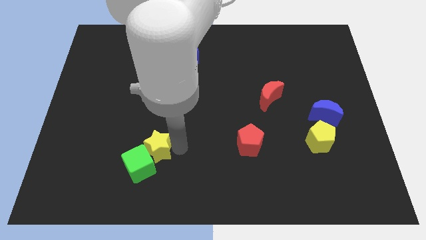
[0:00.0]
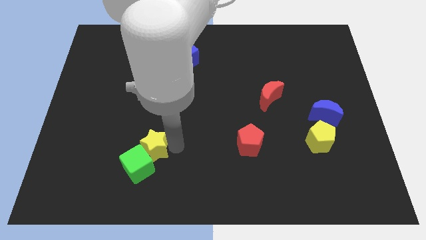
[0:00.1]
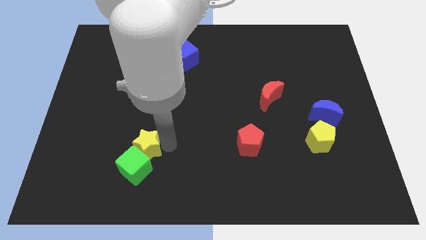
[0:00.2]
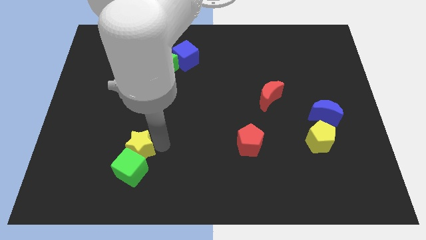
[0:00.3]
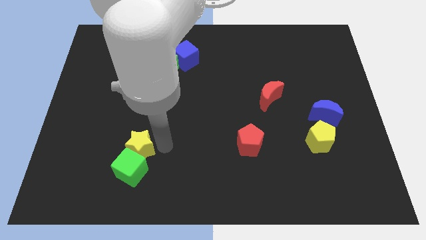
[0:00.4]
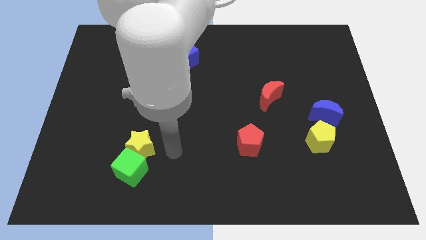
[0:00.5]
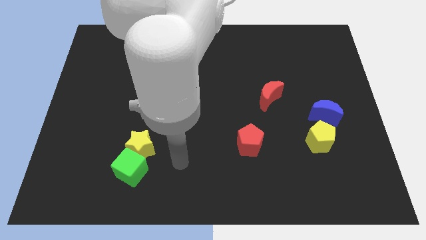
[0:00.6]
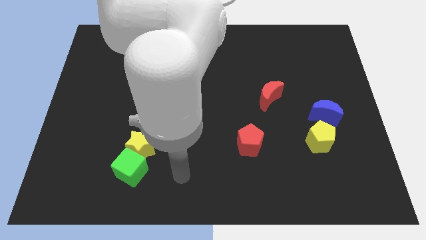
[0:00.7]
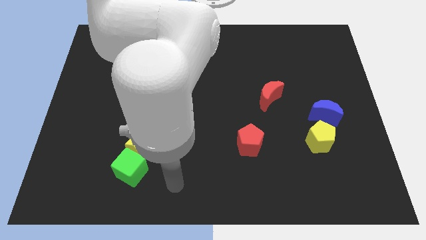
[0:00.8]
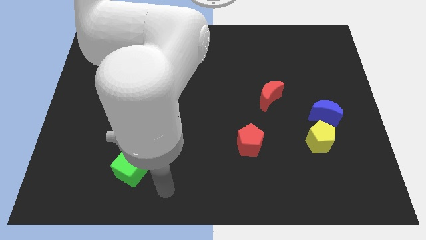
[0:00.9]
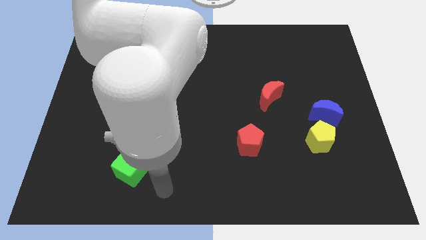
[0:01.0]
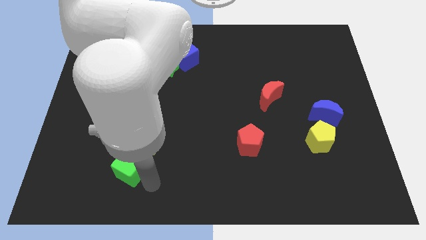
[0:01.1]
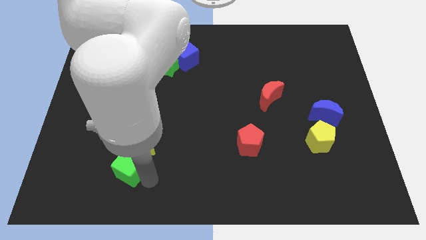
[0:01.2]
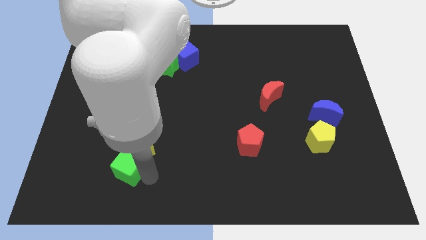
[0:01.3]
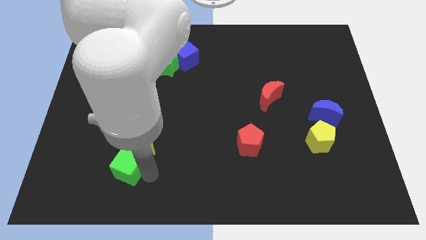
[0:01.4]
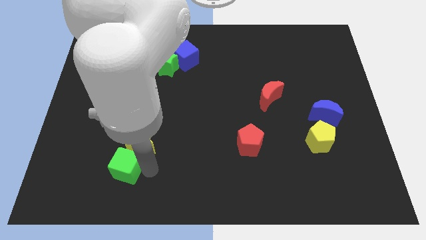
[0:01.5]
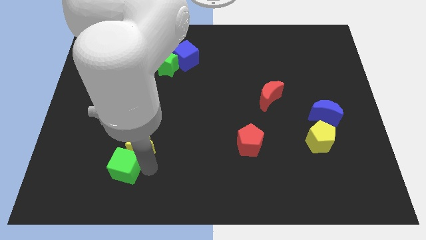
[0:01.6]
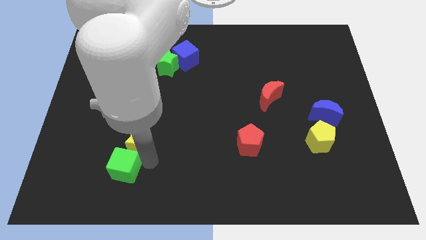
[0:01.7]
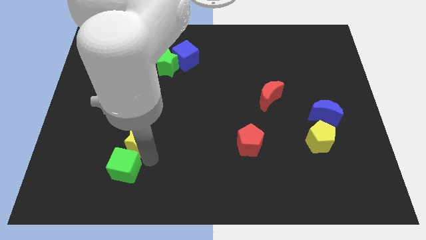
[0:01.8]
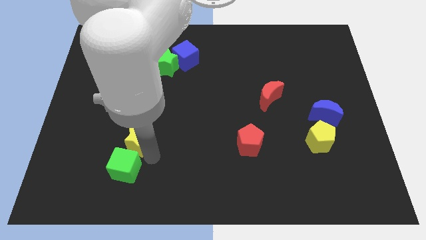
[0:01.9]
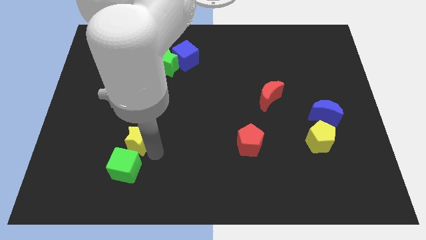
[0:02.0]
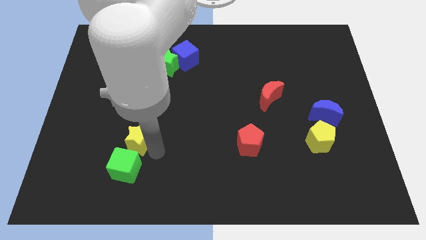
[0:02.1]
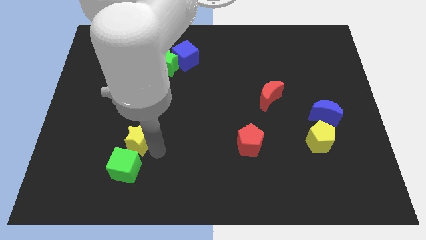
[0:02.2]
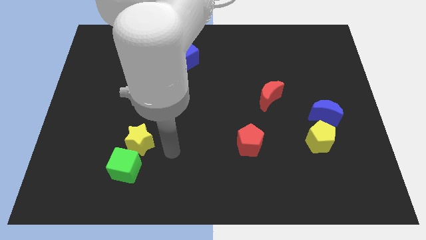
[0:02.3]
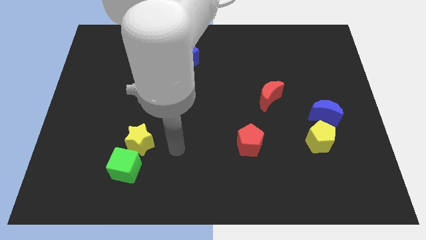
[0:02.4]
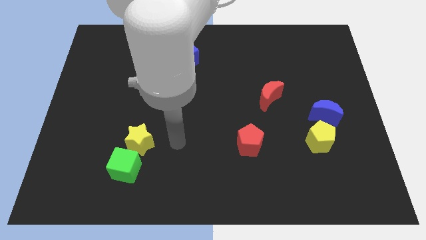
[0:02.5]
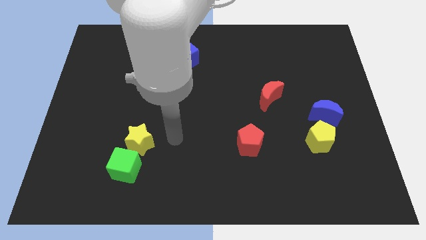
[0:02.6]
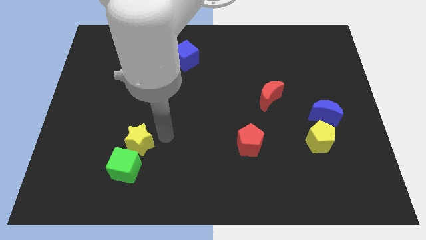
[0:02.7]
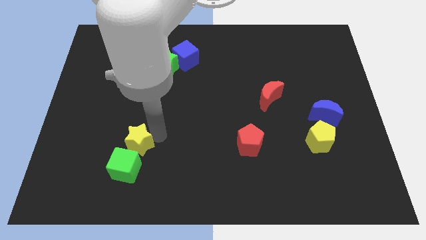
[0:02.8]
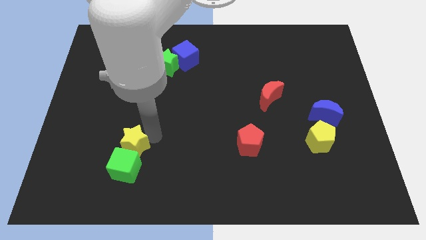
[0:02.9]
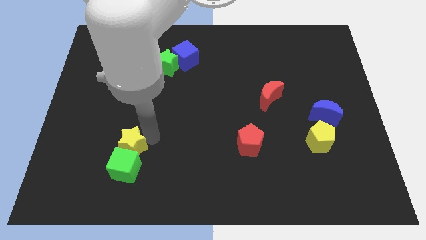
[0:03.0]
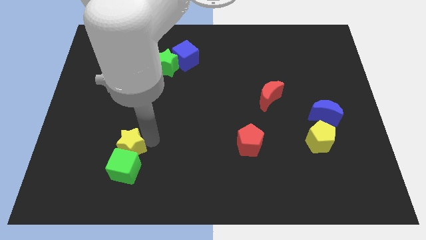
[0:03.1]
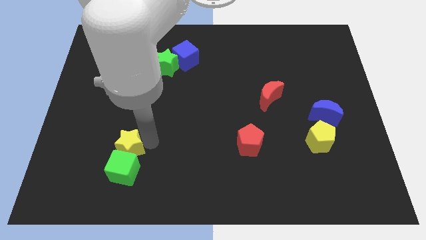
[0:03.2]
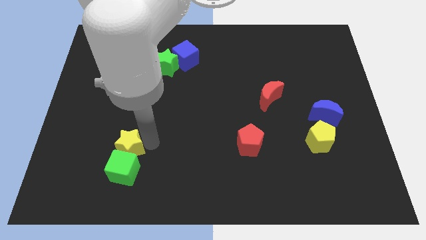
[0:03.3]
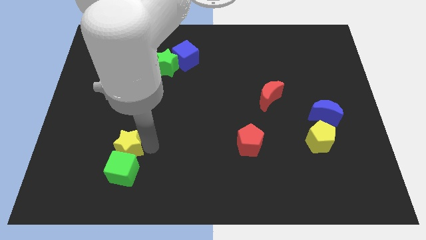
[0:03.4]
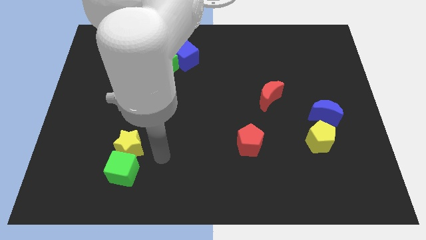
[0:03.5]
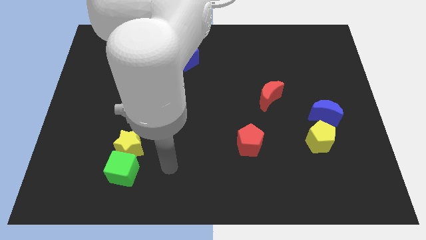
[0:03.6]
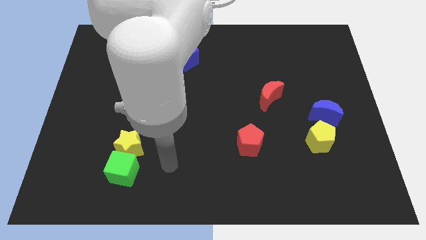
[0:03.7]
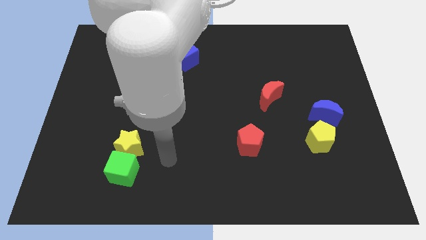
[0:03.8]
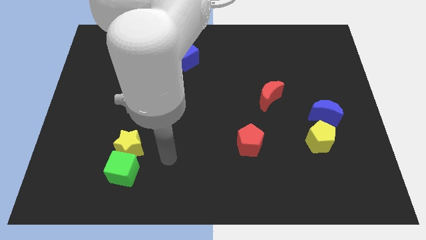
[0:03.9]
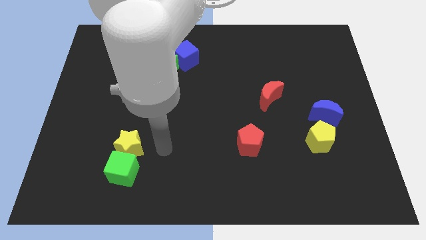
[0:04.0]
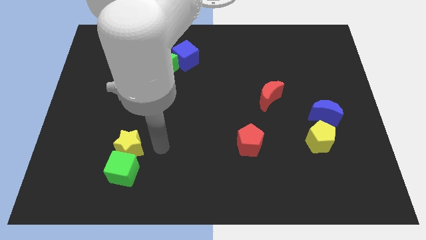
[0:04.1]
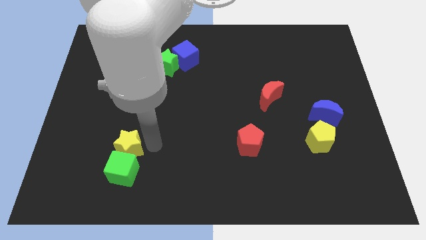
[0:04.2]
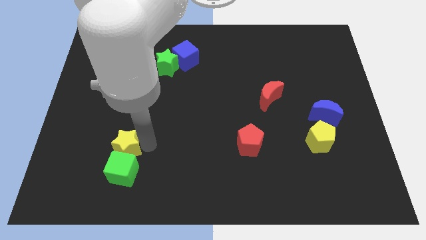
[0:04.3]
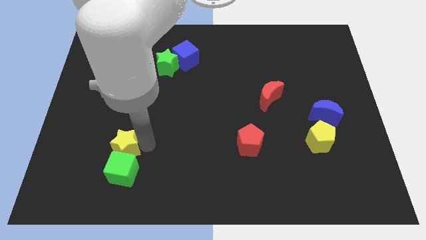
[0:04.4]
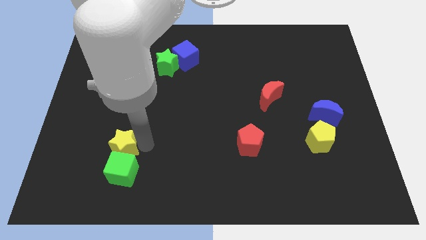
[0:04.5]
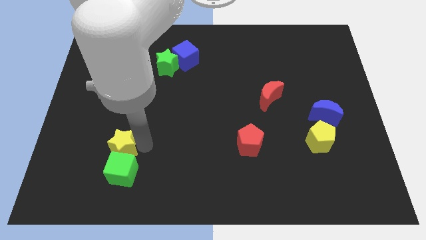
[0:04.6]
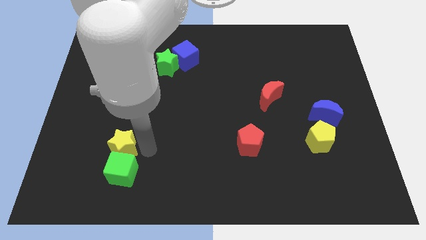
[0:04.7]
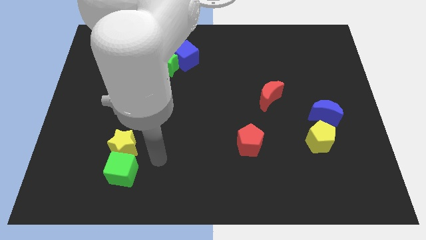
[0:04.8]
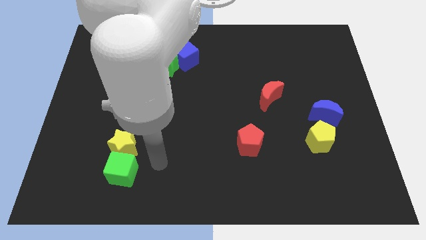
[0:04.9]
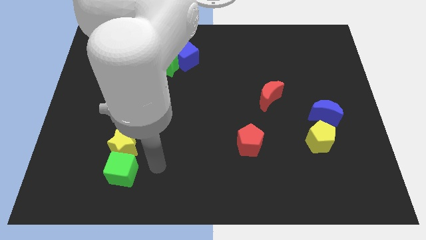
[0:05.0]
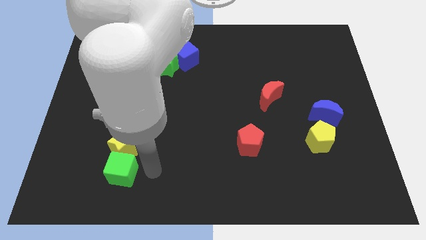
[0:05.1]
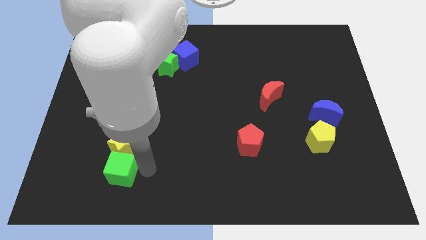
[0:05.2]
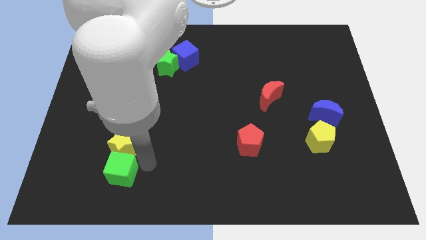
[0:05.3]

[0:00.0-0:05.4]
push the yellow star and green cube to the left side of the board

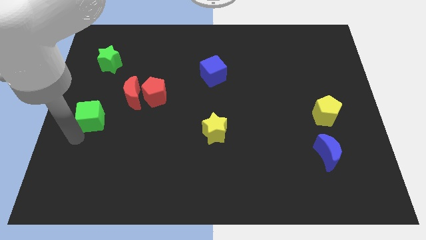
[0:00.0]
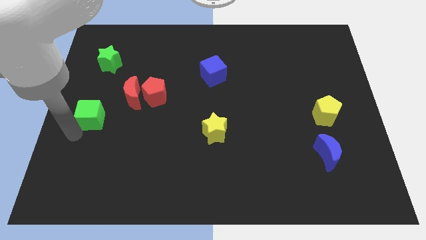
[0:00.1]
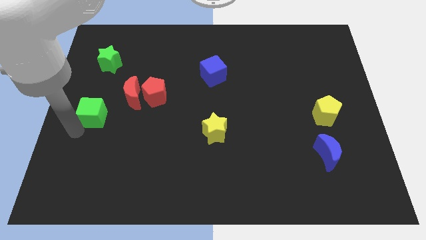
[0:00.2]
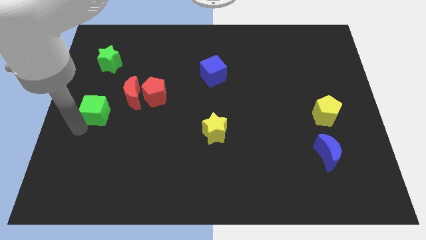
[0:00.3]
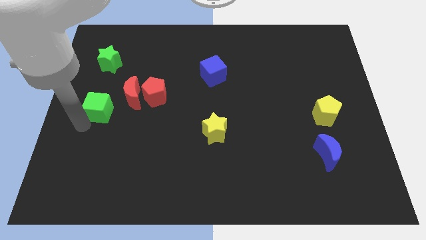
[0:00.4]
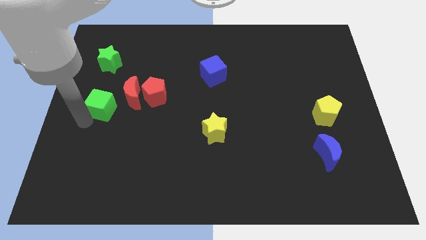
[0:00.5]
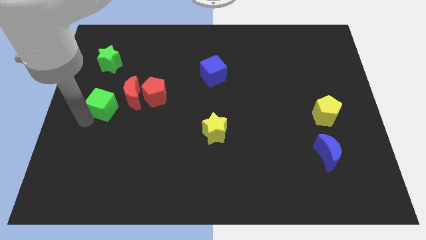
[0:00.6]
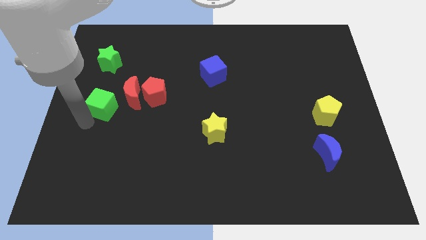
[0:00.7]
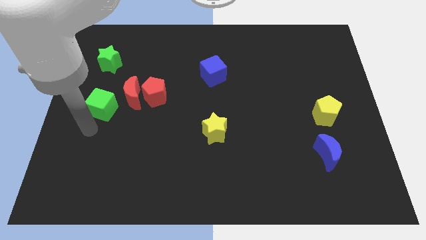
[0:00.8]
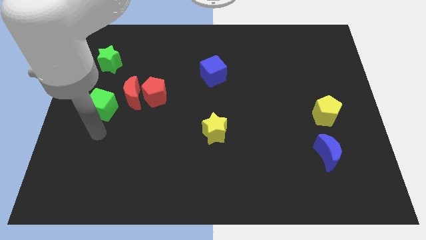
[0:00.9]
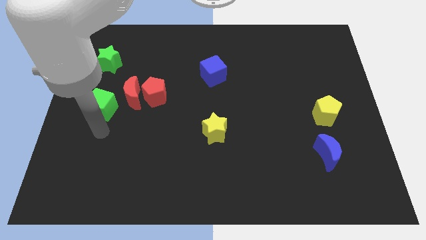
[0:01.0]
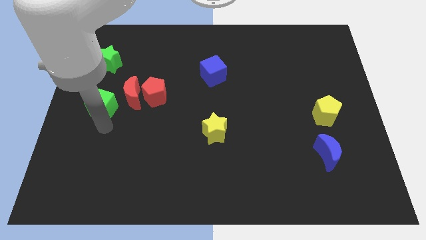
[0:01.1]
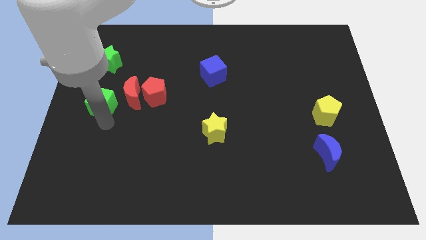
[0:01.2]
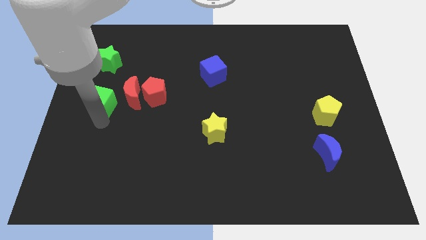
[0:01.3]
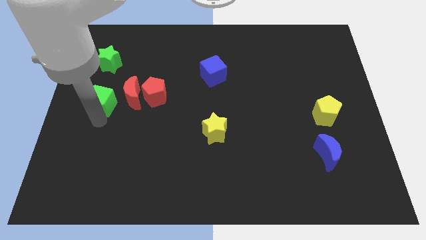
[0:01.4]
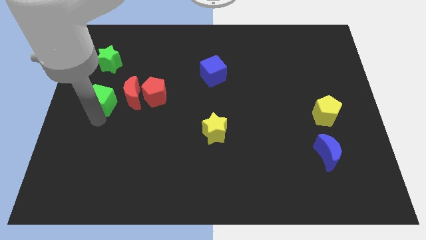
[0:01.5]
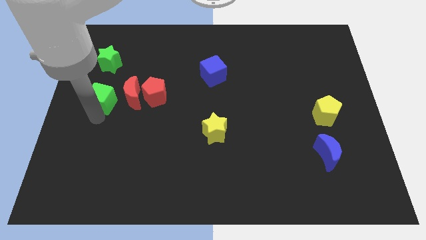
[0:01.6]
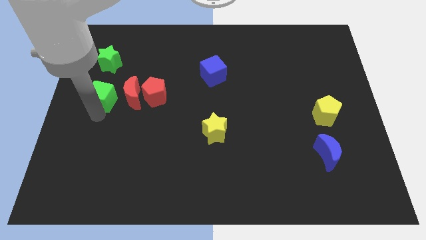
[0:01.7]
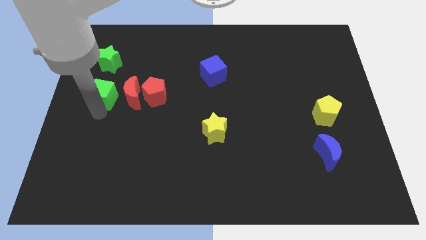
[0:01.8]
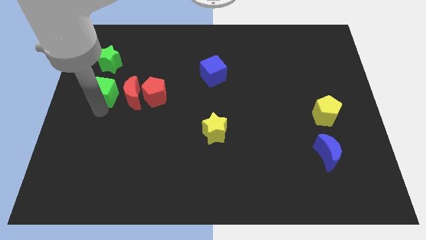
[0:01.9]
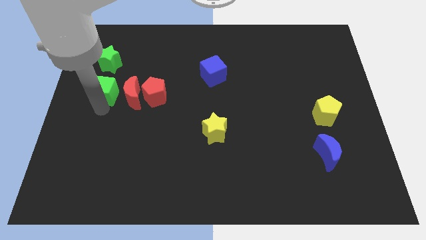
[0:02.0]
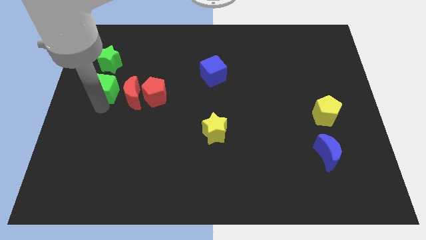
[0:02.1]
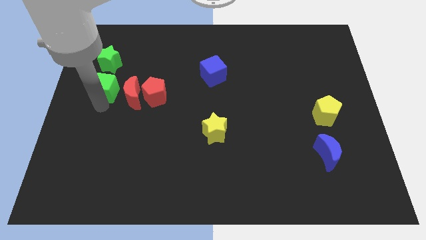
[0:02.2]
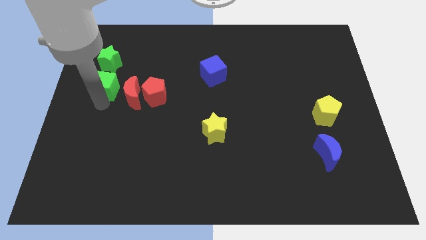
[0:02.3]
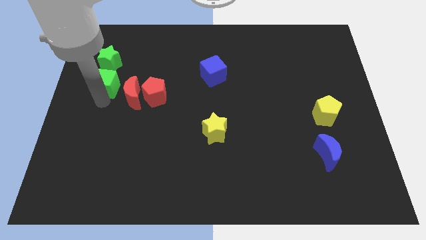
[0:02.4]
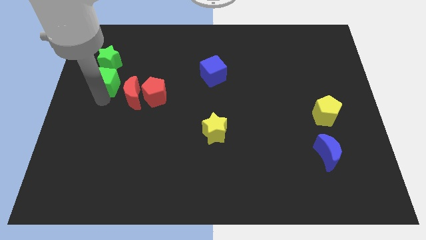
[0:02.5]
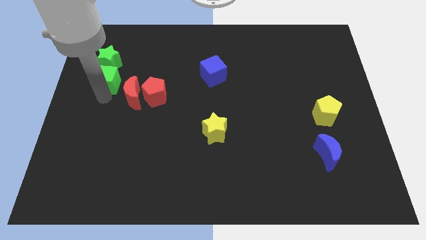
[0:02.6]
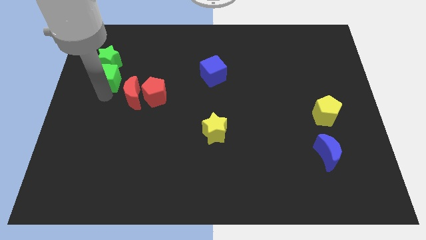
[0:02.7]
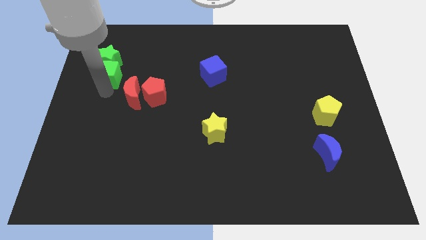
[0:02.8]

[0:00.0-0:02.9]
move the green cube vertically at the bottom of the green star

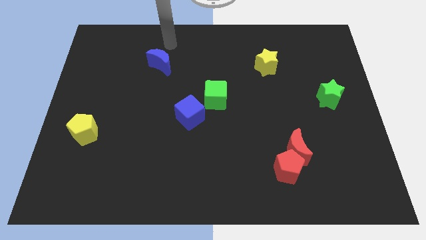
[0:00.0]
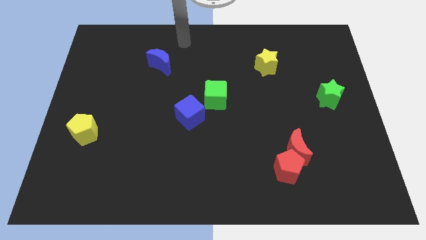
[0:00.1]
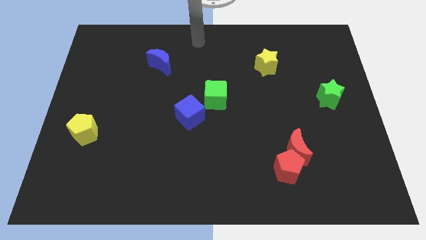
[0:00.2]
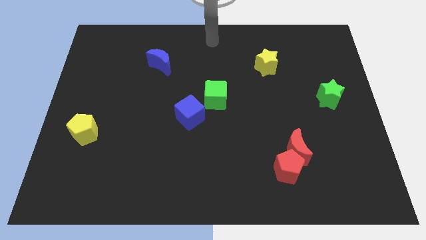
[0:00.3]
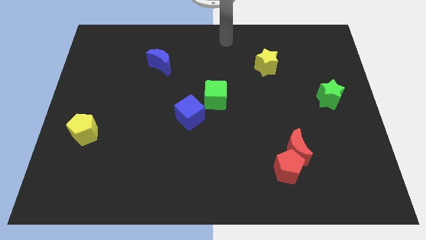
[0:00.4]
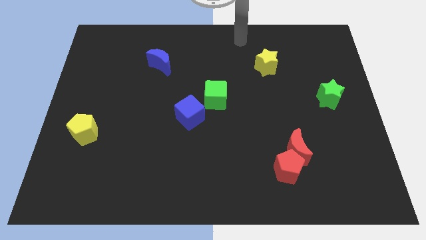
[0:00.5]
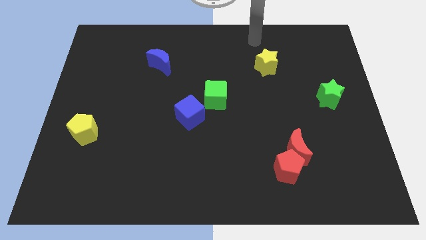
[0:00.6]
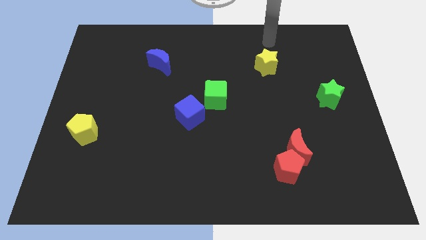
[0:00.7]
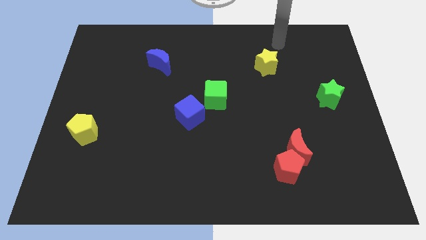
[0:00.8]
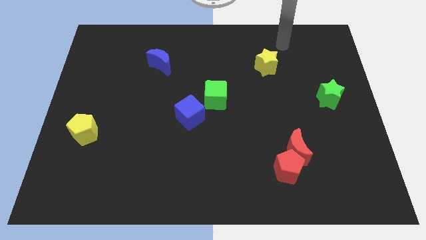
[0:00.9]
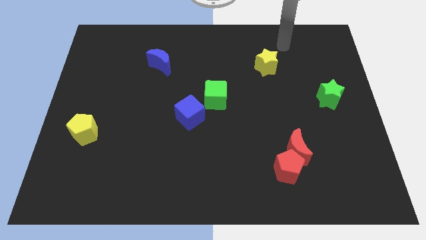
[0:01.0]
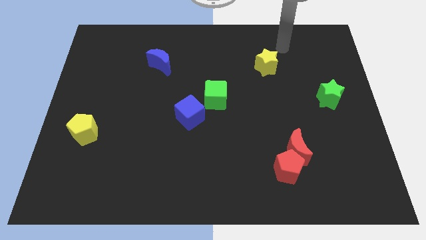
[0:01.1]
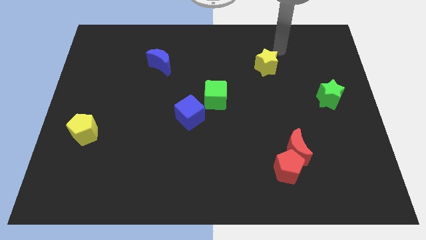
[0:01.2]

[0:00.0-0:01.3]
place your arm at the top right of the yellow star
